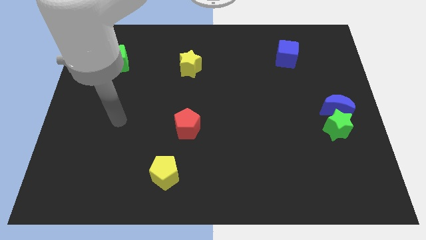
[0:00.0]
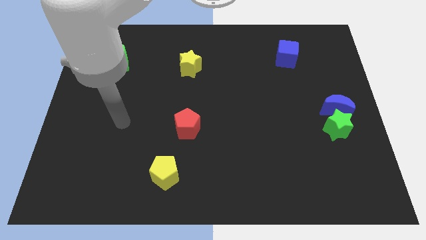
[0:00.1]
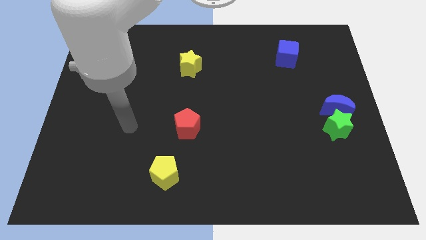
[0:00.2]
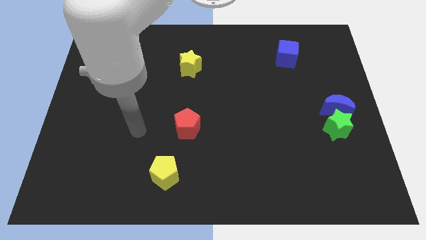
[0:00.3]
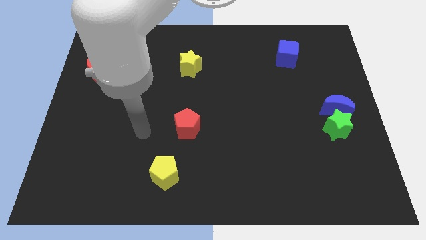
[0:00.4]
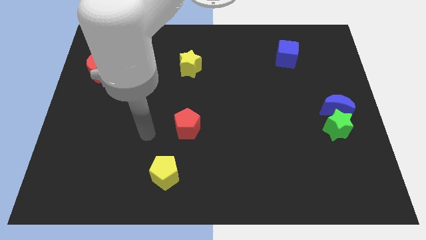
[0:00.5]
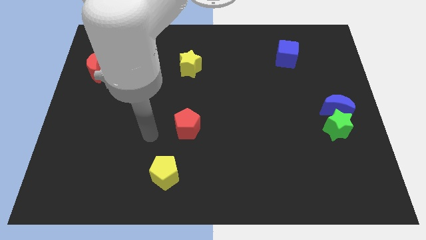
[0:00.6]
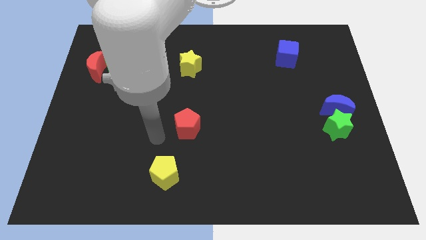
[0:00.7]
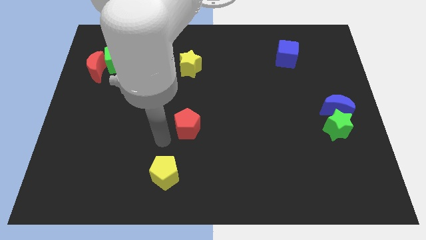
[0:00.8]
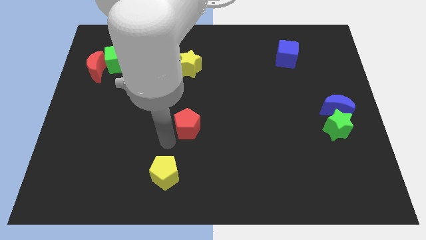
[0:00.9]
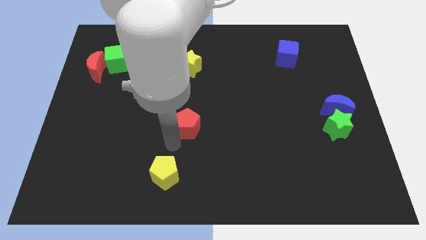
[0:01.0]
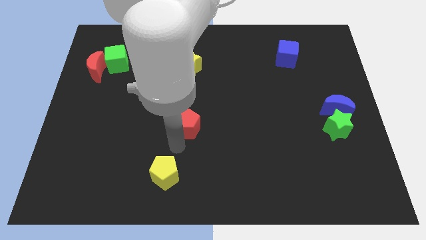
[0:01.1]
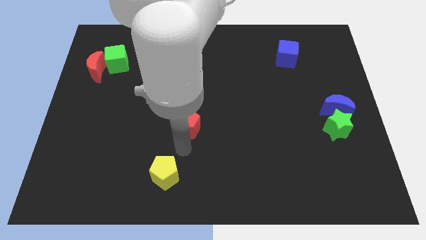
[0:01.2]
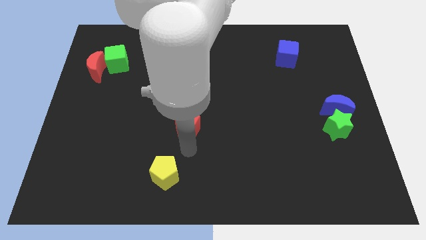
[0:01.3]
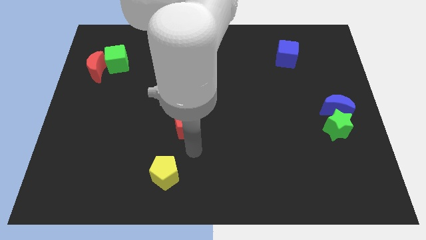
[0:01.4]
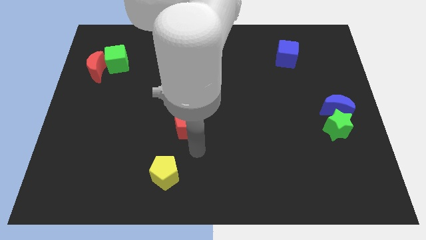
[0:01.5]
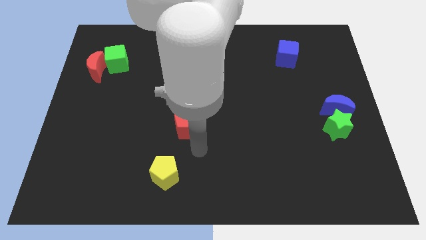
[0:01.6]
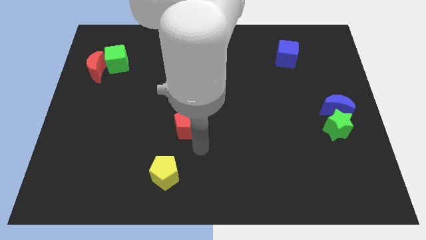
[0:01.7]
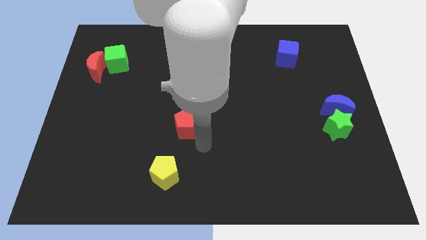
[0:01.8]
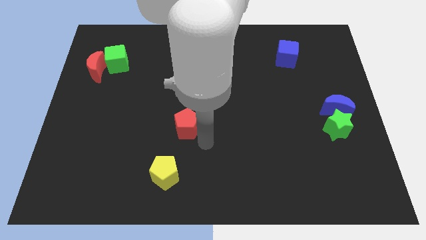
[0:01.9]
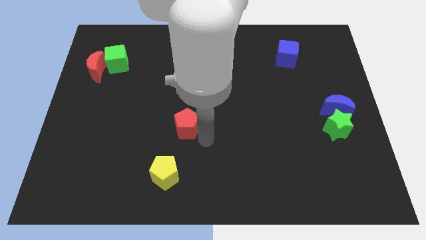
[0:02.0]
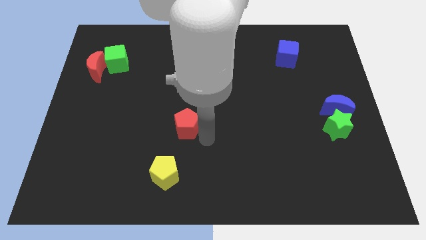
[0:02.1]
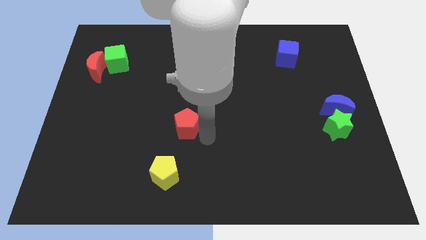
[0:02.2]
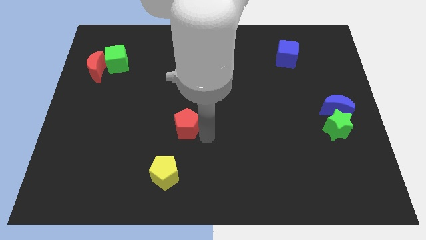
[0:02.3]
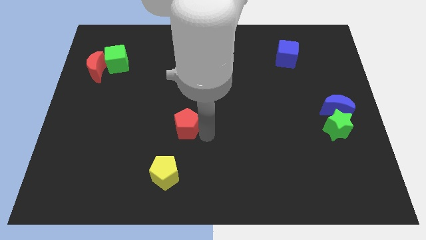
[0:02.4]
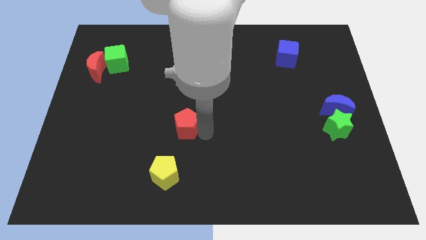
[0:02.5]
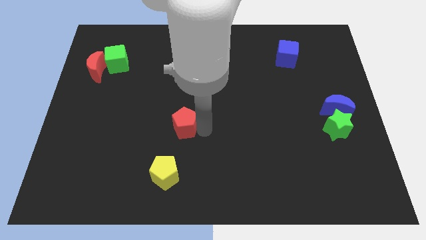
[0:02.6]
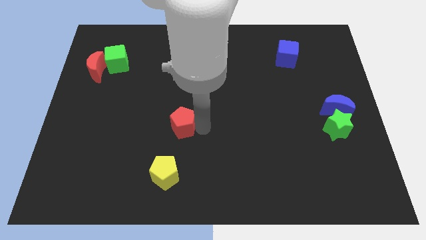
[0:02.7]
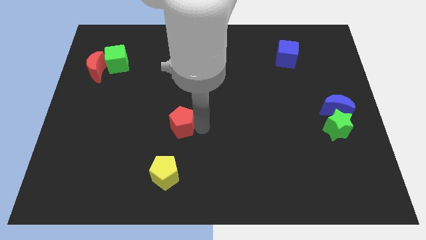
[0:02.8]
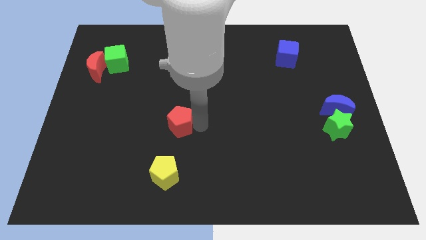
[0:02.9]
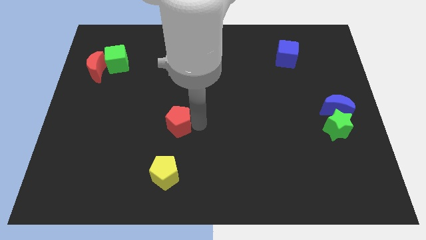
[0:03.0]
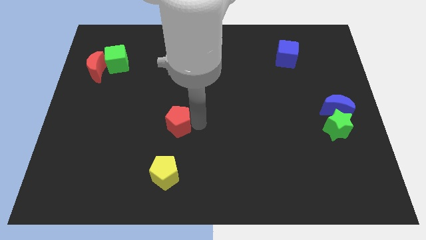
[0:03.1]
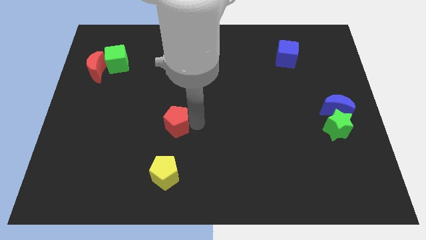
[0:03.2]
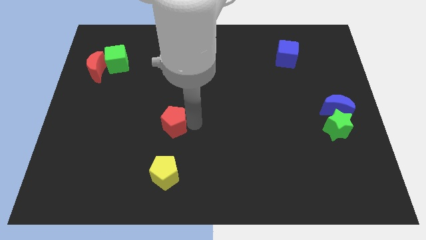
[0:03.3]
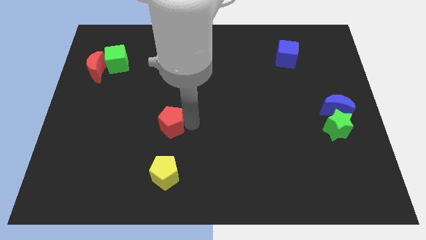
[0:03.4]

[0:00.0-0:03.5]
place the red pentagon above the yellow pentagon

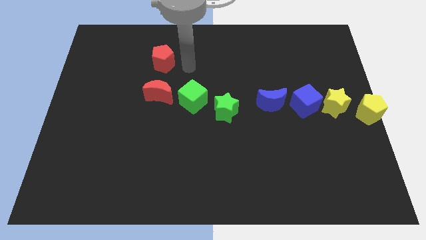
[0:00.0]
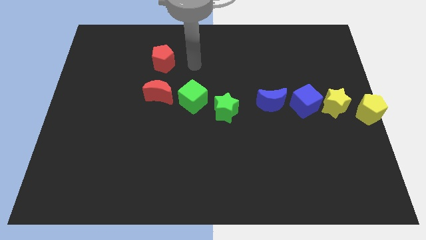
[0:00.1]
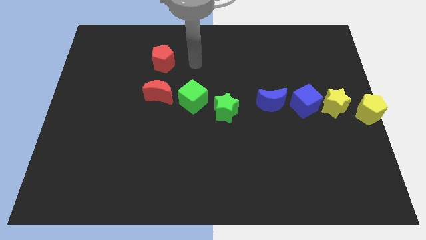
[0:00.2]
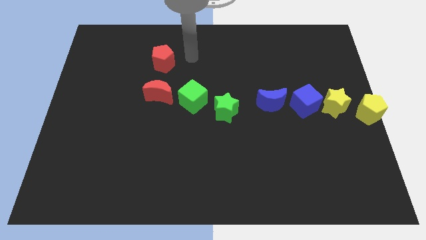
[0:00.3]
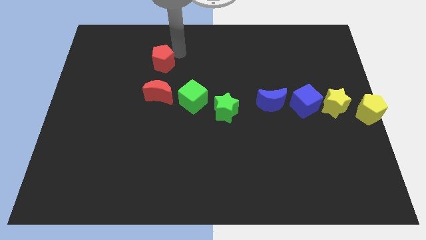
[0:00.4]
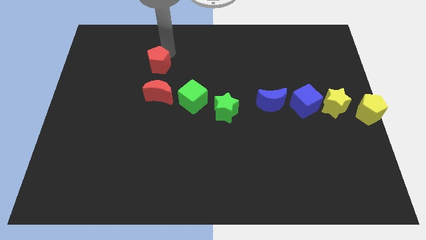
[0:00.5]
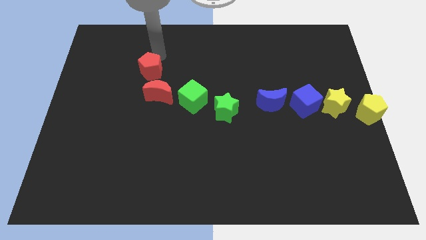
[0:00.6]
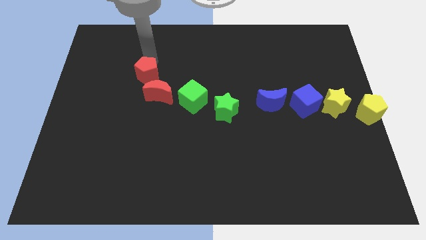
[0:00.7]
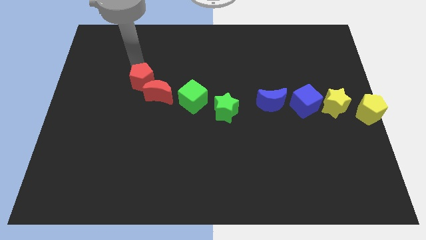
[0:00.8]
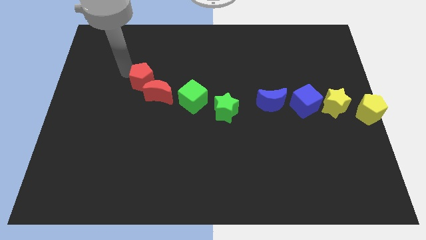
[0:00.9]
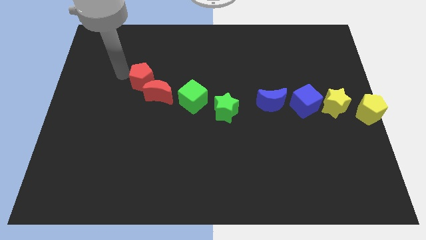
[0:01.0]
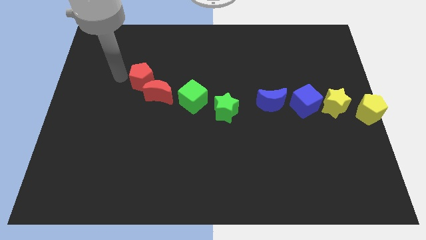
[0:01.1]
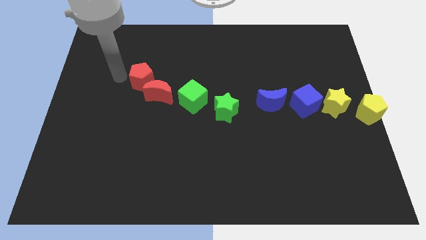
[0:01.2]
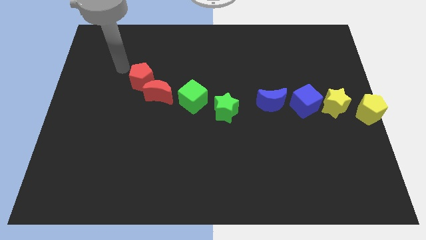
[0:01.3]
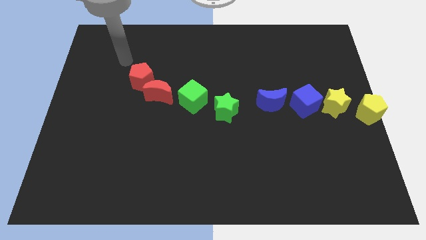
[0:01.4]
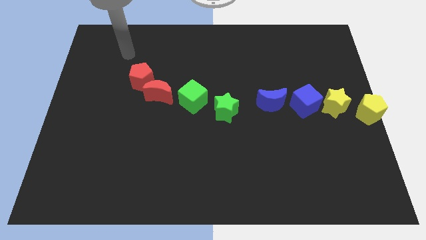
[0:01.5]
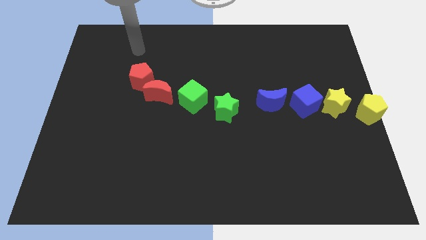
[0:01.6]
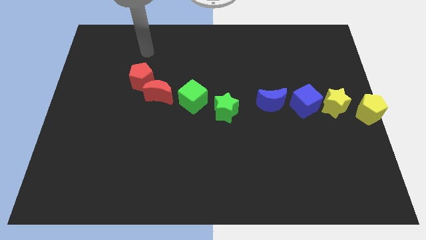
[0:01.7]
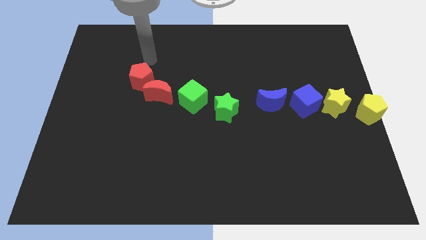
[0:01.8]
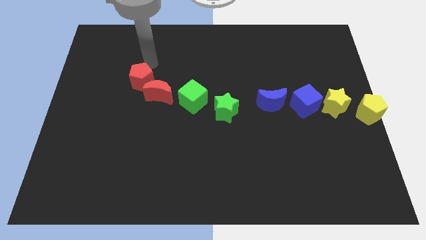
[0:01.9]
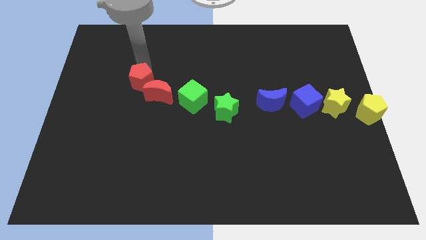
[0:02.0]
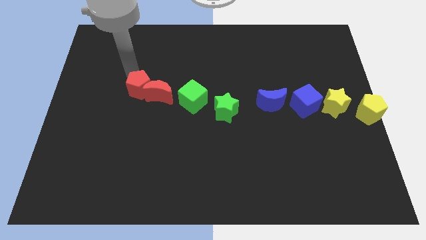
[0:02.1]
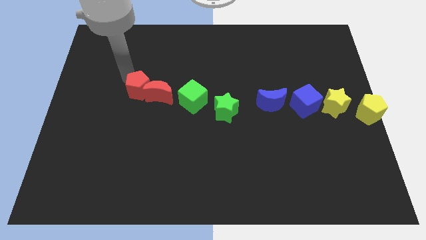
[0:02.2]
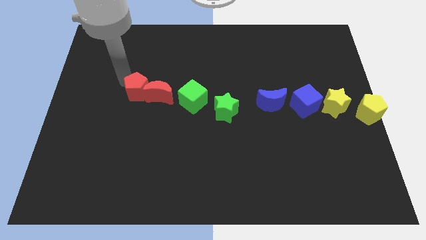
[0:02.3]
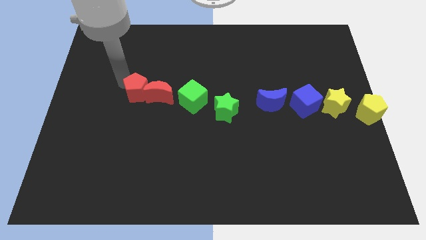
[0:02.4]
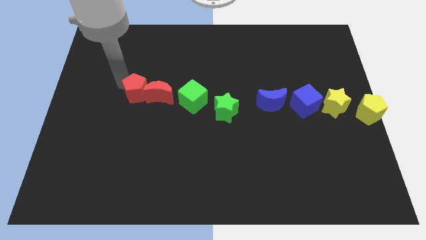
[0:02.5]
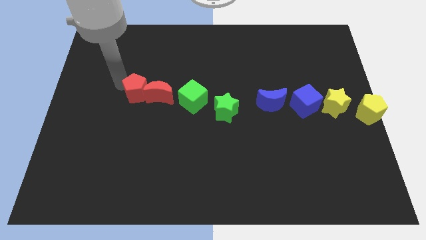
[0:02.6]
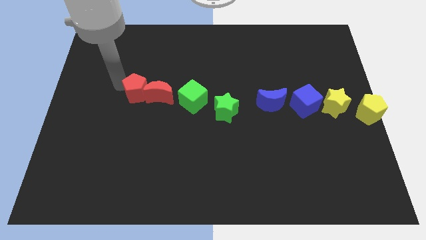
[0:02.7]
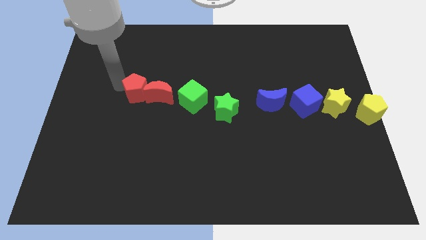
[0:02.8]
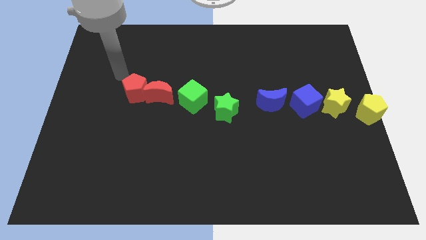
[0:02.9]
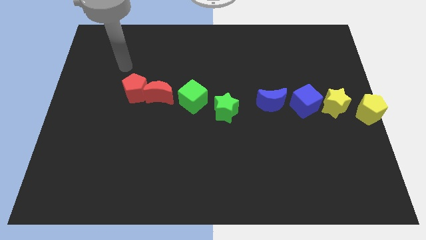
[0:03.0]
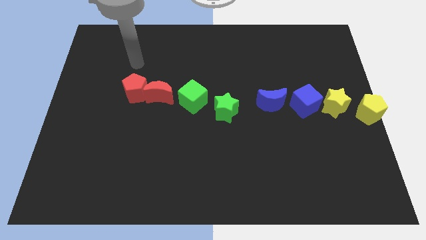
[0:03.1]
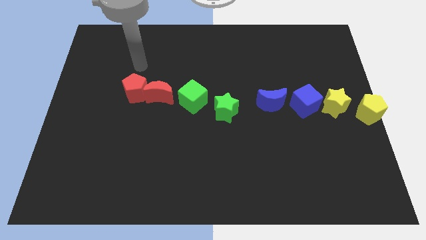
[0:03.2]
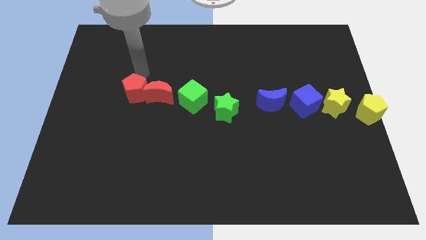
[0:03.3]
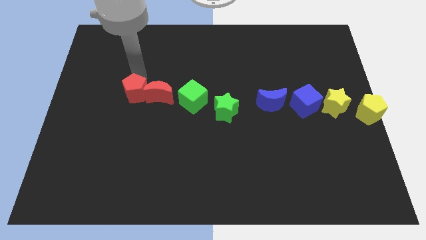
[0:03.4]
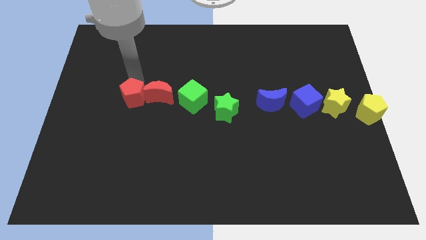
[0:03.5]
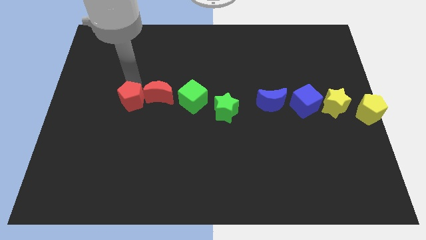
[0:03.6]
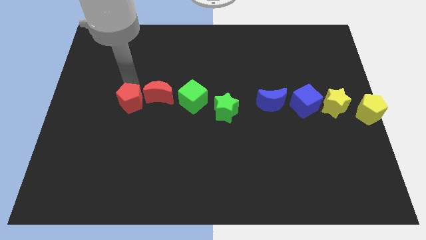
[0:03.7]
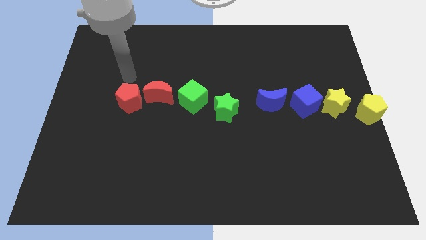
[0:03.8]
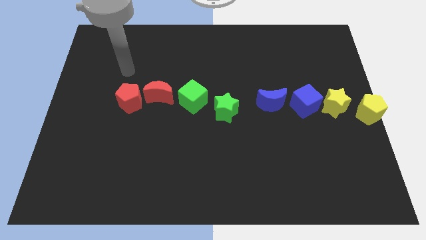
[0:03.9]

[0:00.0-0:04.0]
place the red pentagon to the left of the red moon

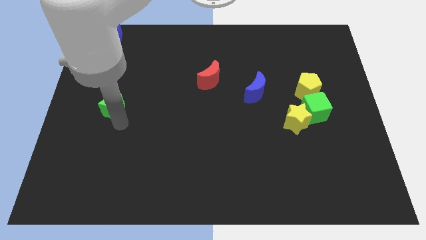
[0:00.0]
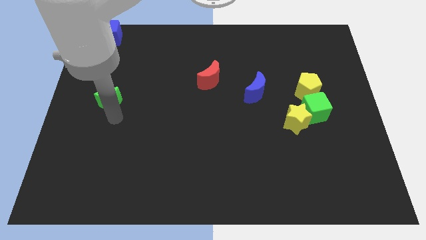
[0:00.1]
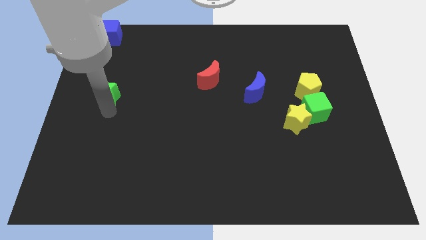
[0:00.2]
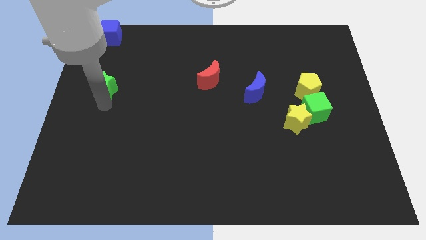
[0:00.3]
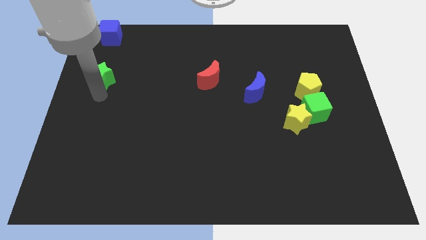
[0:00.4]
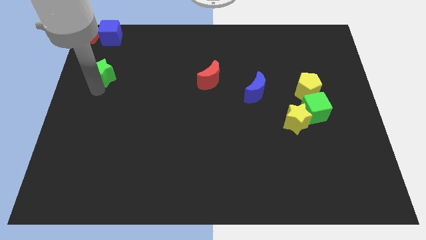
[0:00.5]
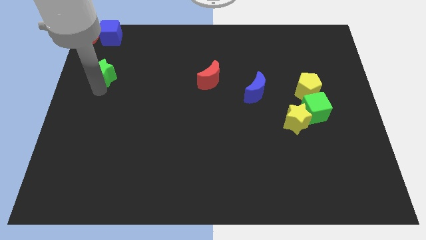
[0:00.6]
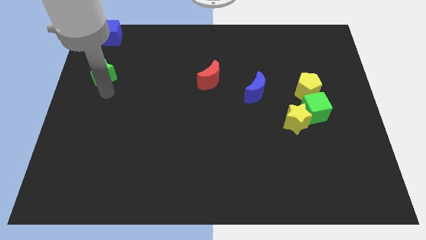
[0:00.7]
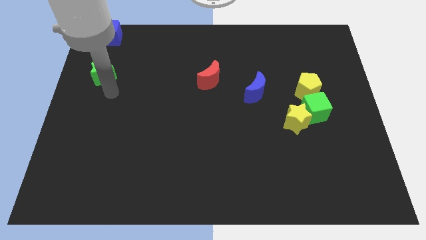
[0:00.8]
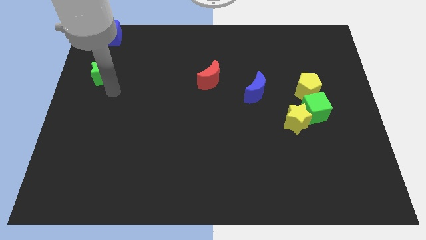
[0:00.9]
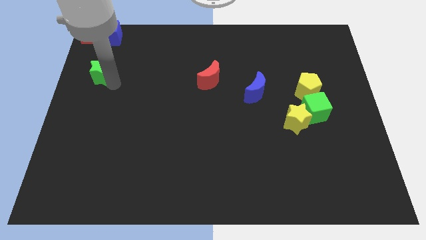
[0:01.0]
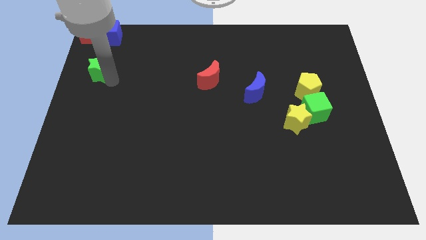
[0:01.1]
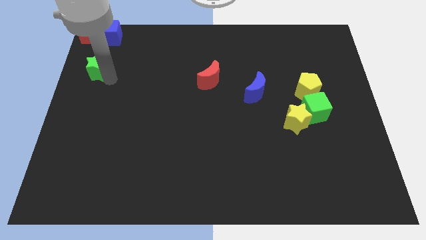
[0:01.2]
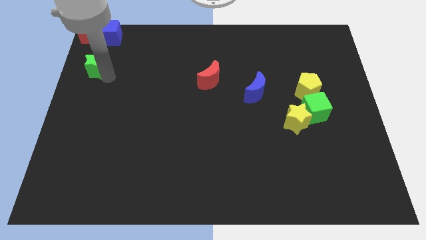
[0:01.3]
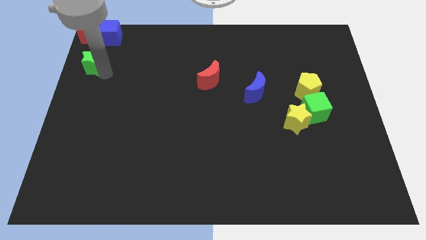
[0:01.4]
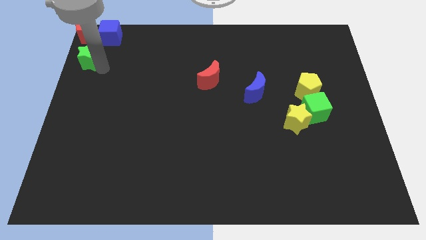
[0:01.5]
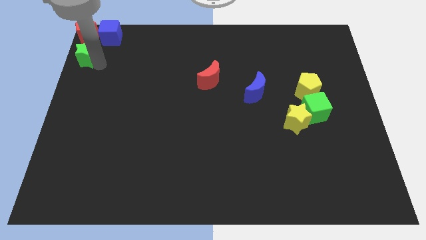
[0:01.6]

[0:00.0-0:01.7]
place the green star below the red pentagon
